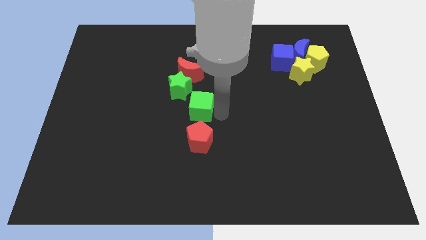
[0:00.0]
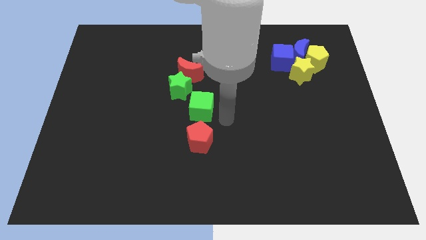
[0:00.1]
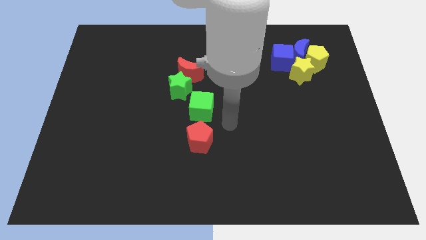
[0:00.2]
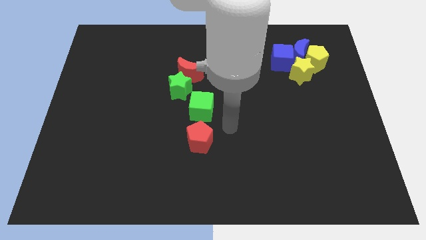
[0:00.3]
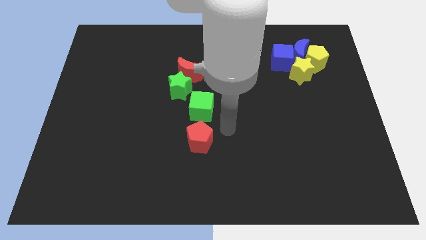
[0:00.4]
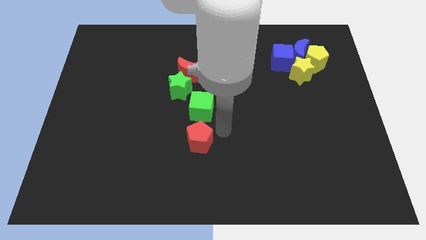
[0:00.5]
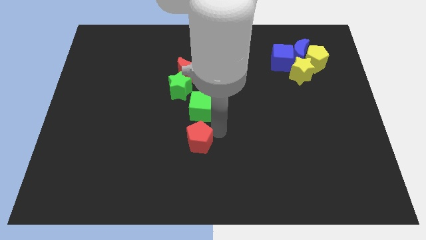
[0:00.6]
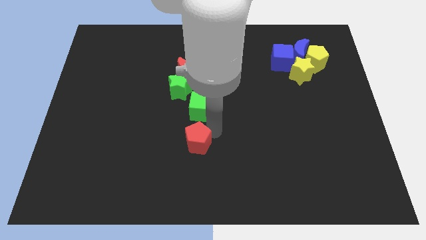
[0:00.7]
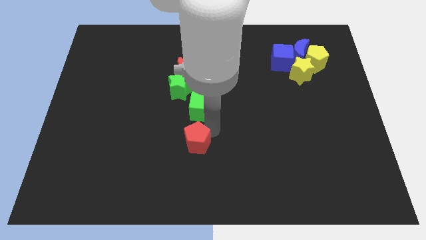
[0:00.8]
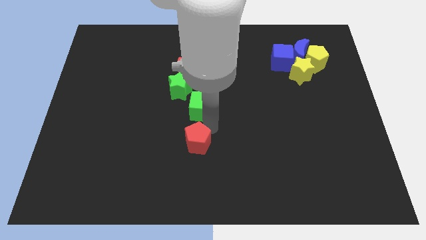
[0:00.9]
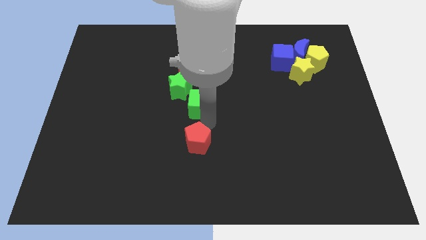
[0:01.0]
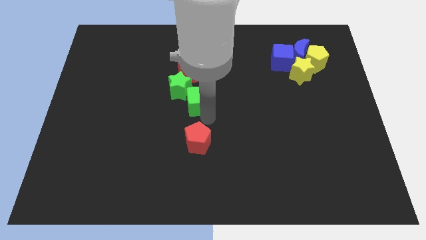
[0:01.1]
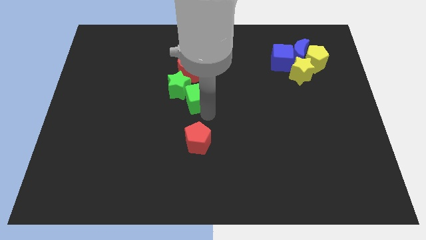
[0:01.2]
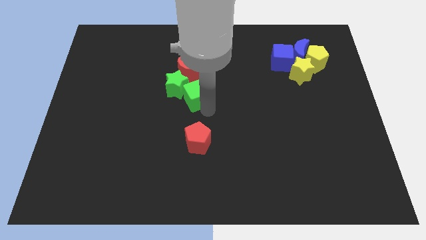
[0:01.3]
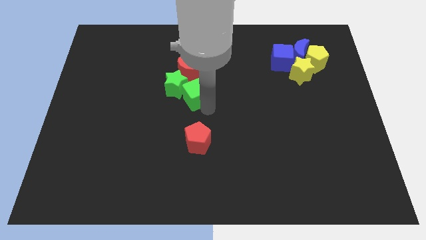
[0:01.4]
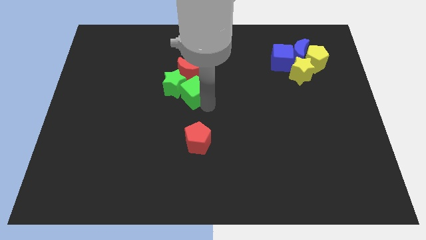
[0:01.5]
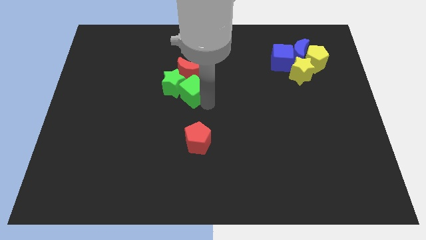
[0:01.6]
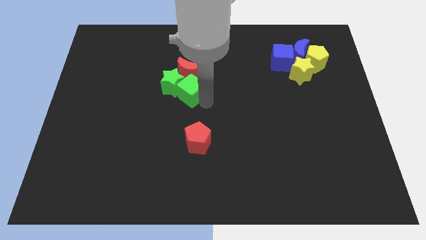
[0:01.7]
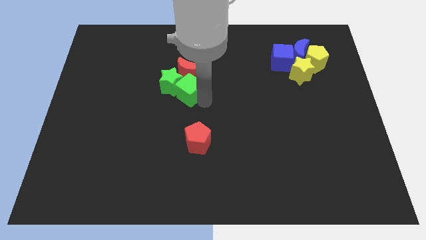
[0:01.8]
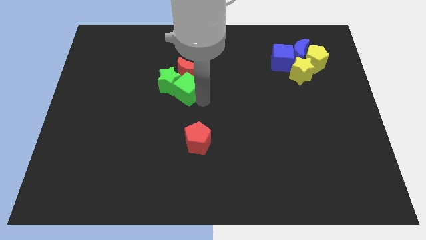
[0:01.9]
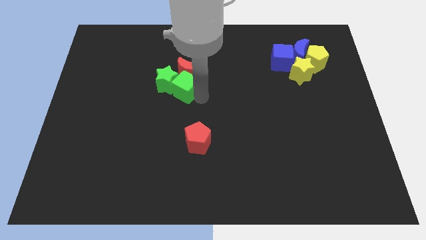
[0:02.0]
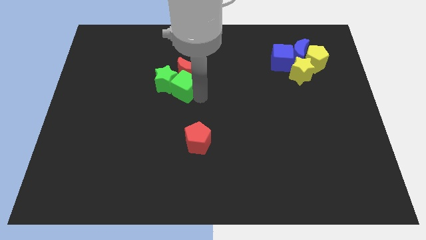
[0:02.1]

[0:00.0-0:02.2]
push the green cube into the green star

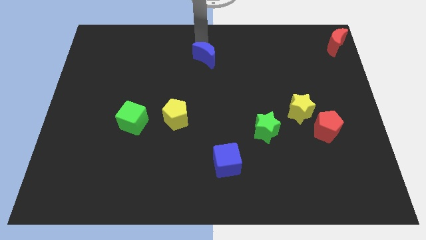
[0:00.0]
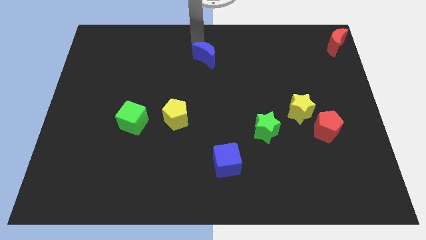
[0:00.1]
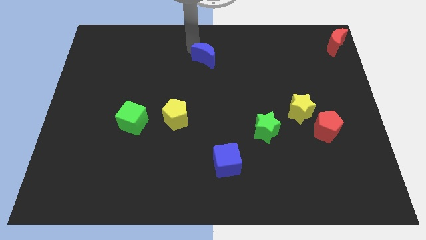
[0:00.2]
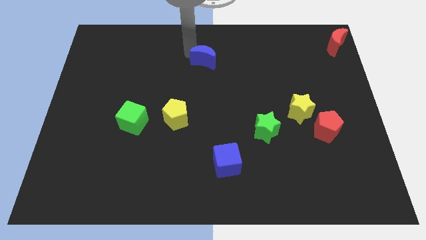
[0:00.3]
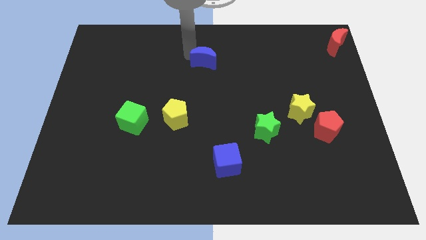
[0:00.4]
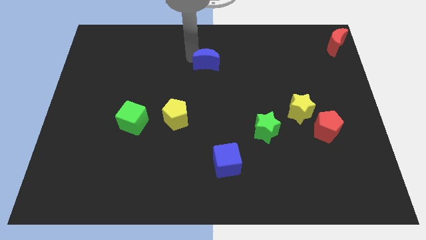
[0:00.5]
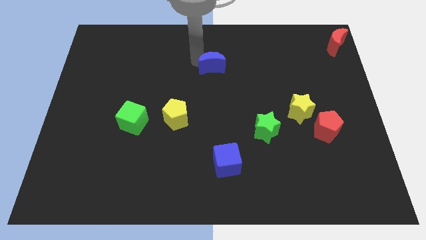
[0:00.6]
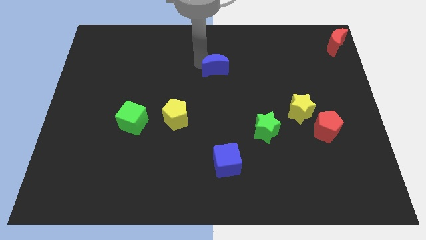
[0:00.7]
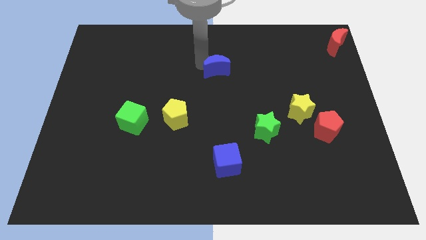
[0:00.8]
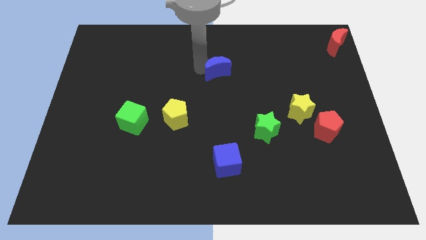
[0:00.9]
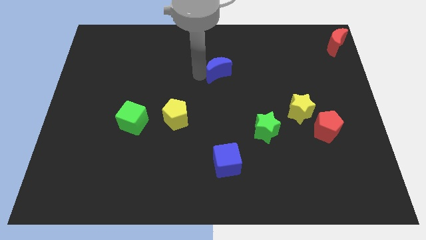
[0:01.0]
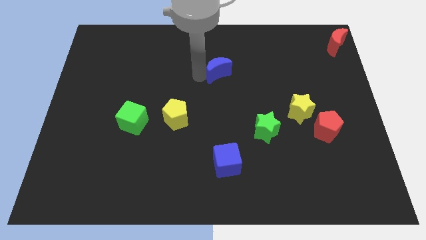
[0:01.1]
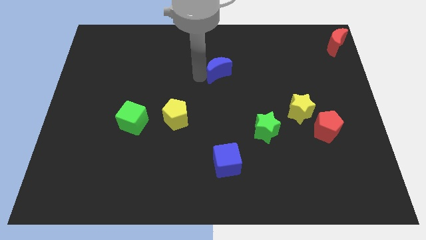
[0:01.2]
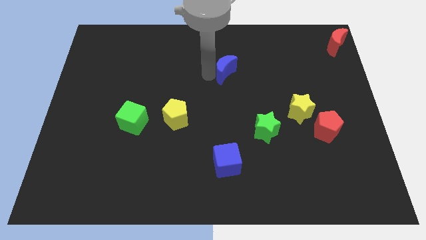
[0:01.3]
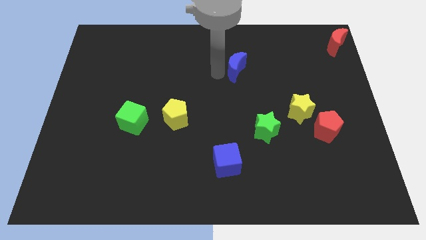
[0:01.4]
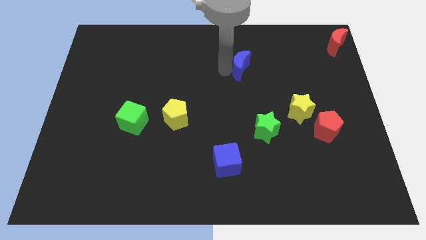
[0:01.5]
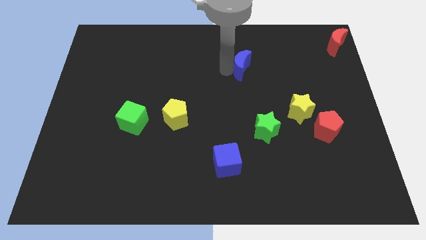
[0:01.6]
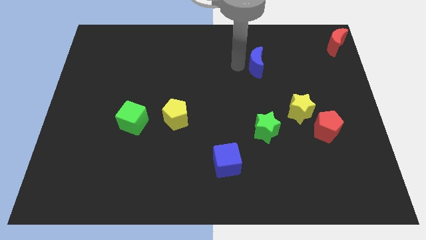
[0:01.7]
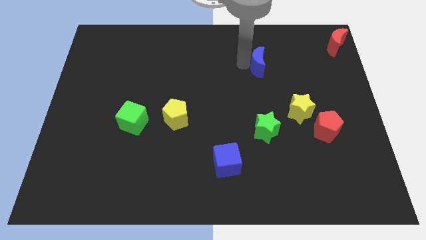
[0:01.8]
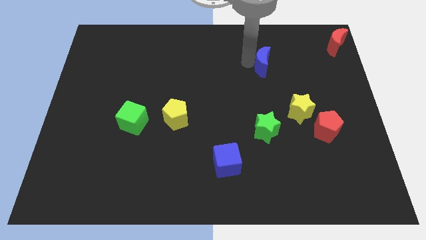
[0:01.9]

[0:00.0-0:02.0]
push blue moon diagonally towards top right

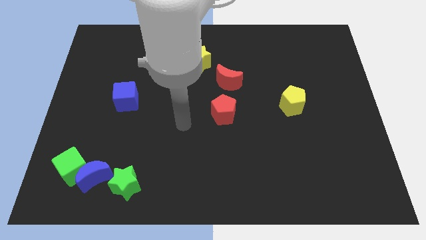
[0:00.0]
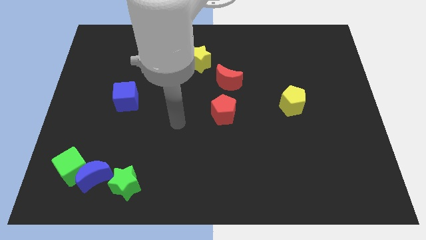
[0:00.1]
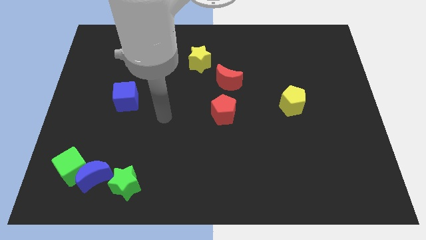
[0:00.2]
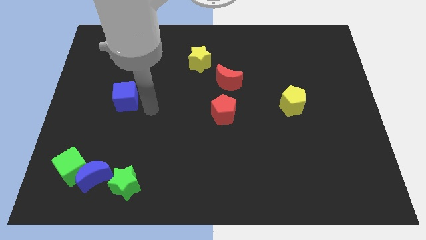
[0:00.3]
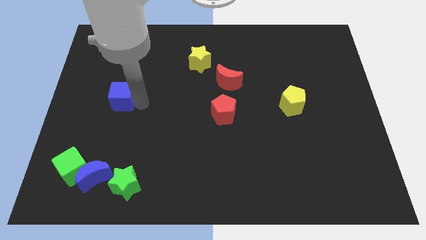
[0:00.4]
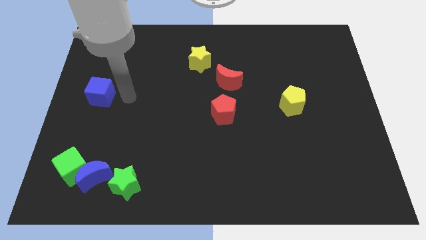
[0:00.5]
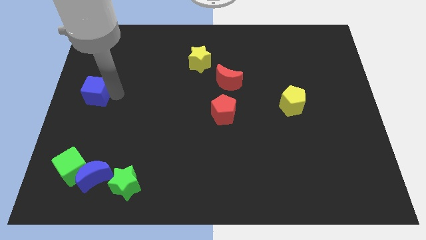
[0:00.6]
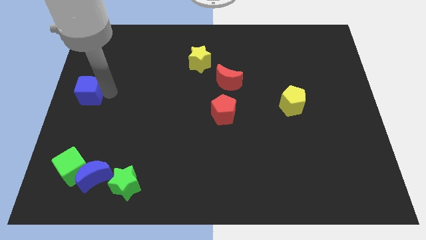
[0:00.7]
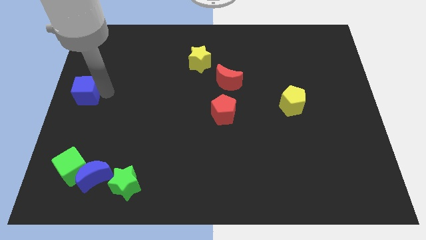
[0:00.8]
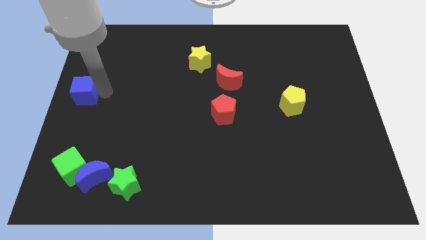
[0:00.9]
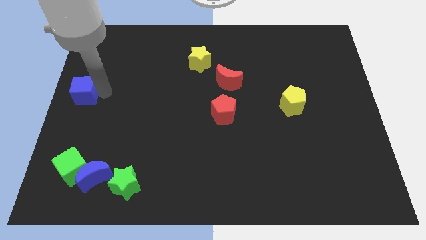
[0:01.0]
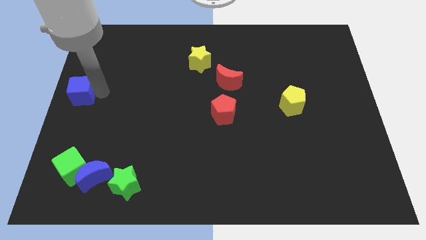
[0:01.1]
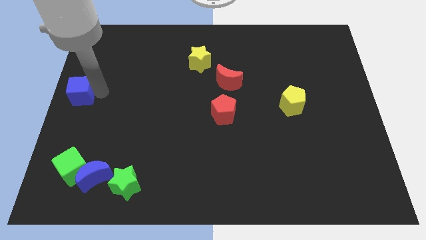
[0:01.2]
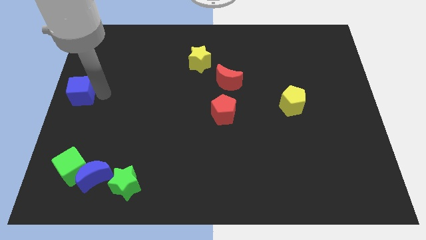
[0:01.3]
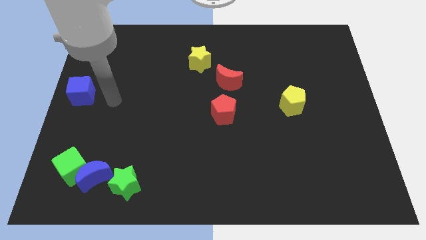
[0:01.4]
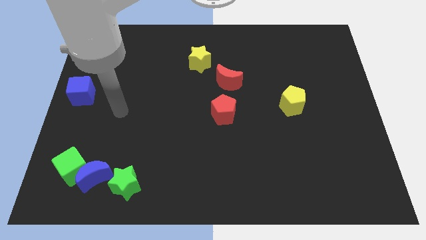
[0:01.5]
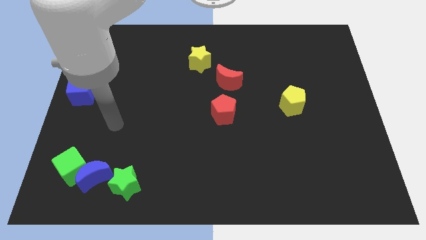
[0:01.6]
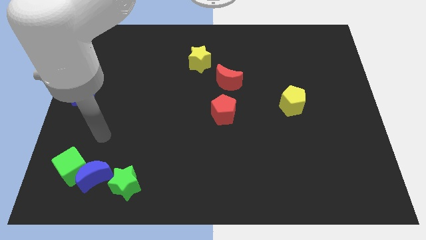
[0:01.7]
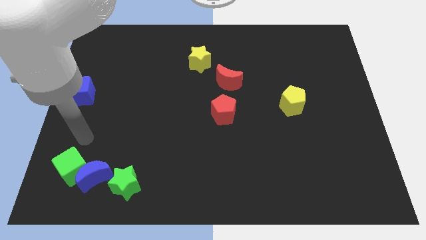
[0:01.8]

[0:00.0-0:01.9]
move the blue cube to the left center of the board

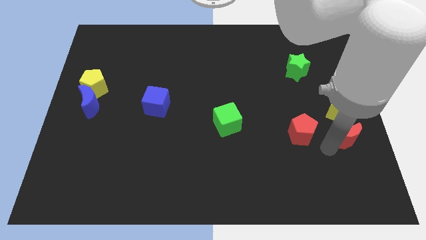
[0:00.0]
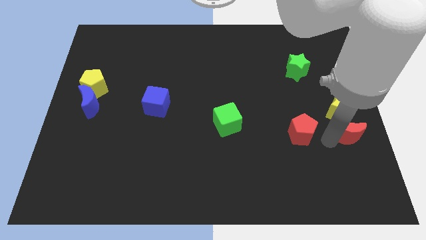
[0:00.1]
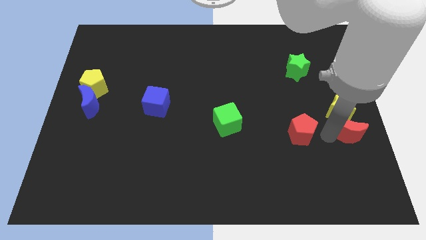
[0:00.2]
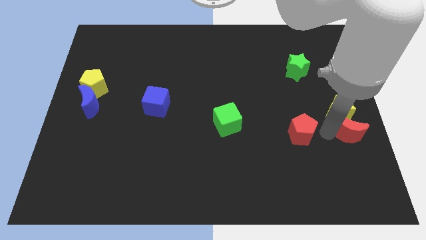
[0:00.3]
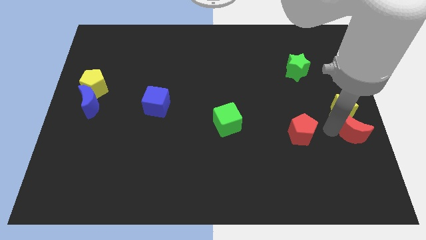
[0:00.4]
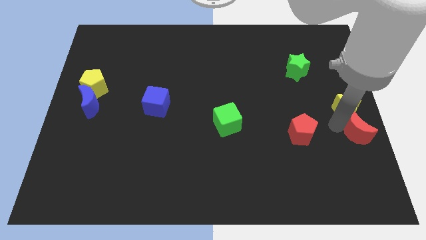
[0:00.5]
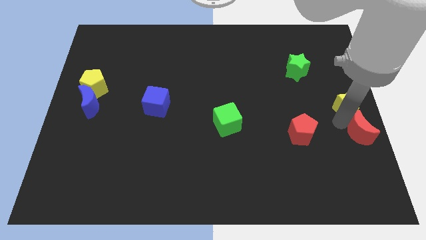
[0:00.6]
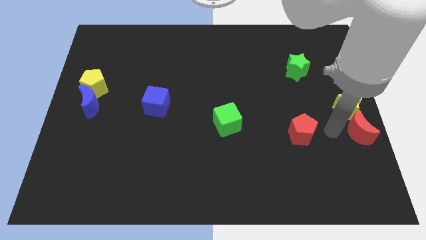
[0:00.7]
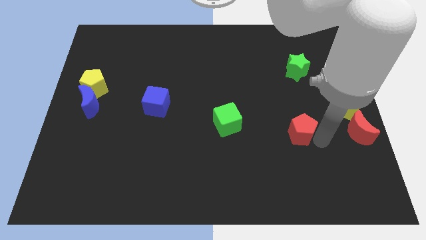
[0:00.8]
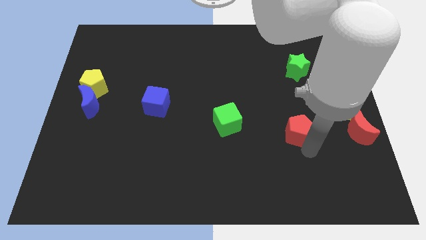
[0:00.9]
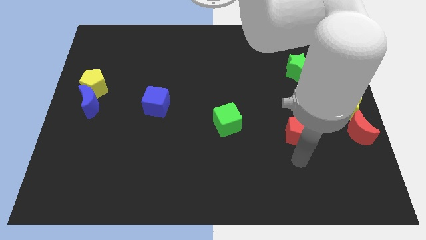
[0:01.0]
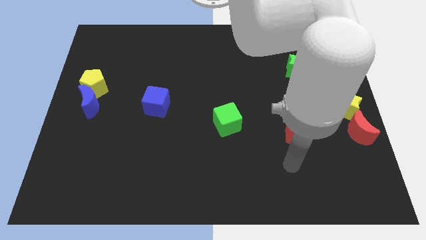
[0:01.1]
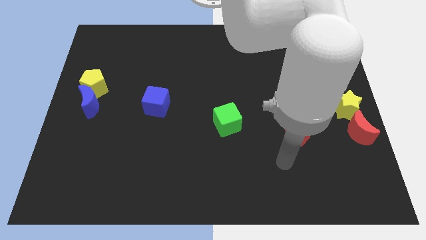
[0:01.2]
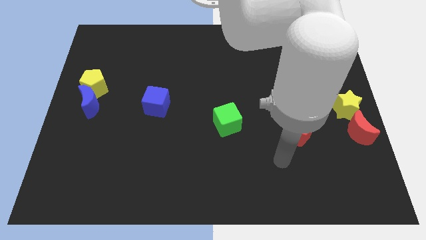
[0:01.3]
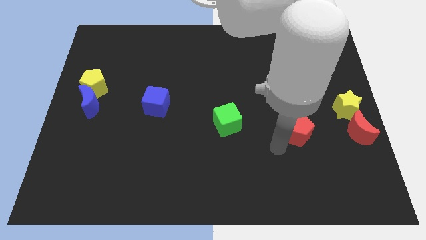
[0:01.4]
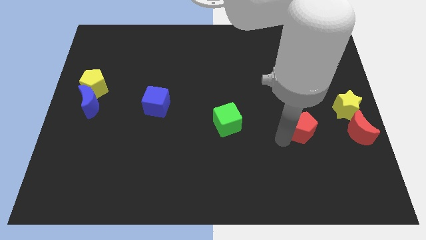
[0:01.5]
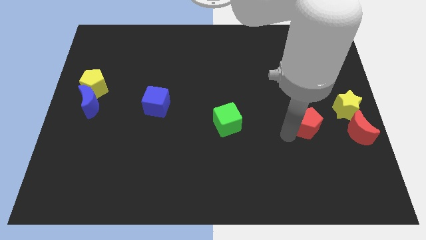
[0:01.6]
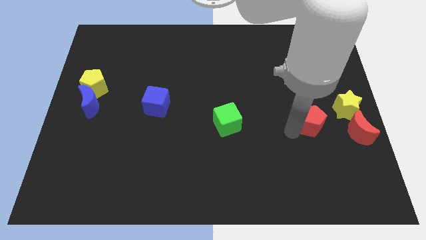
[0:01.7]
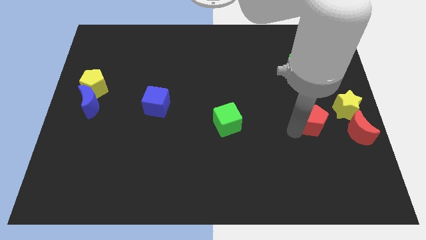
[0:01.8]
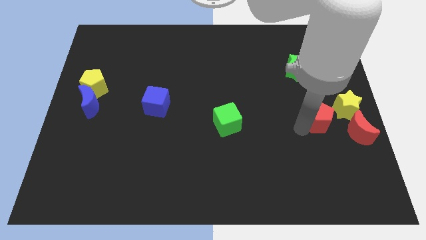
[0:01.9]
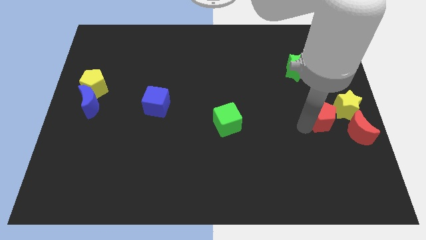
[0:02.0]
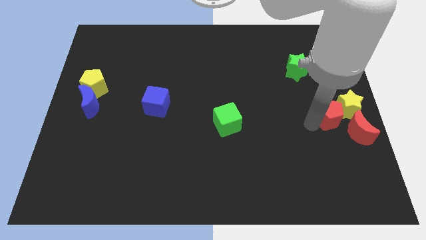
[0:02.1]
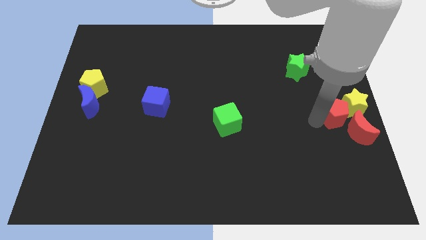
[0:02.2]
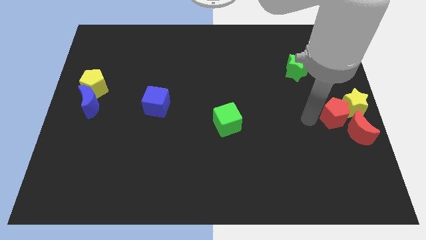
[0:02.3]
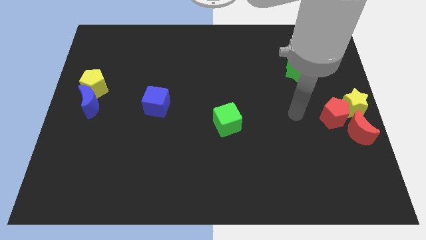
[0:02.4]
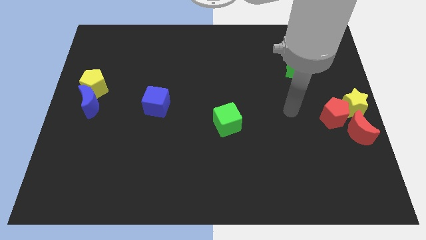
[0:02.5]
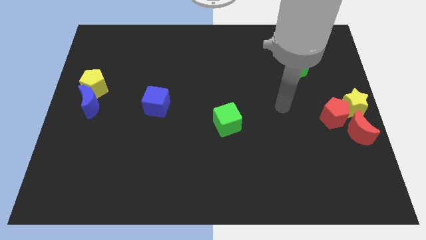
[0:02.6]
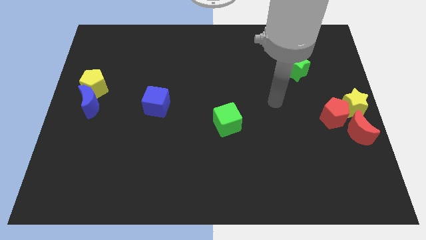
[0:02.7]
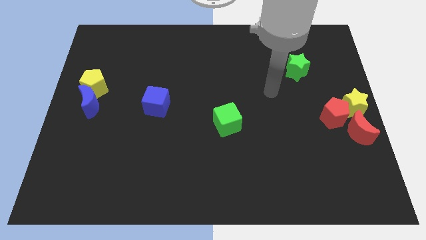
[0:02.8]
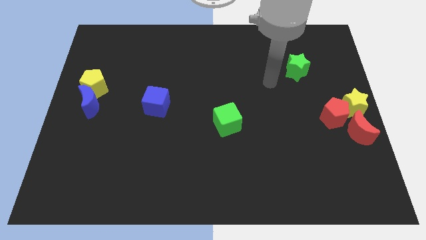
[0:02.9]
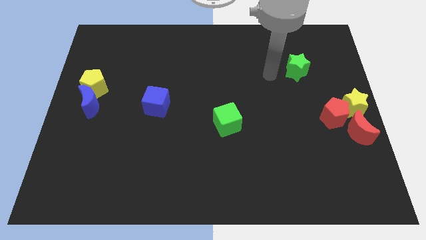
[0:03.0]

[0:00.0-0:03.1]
push the red moon red pentagon and yellow star towards the right center of the board
